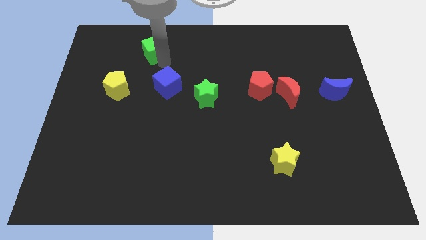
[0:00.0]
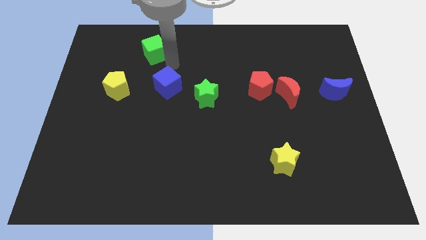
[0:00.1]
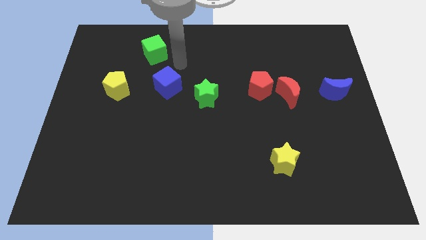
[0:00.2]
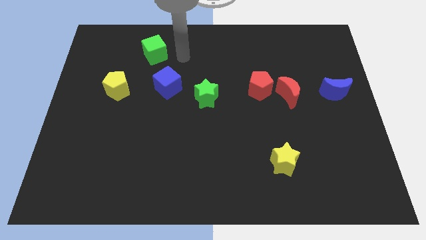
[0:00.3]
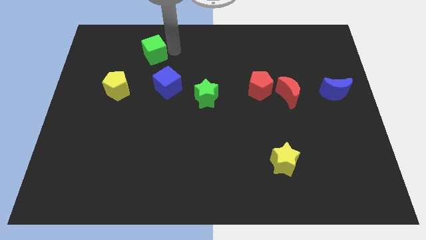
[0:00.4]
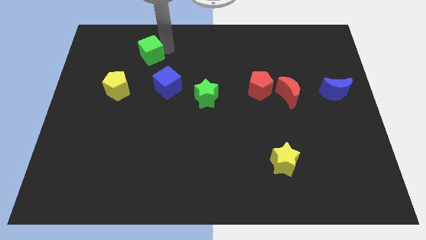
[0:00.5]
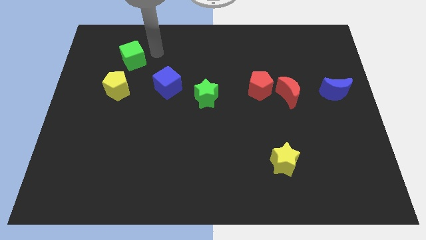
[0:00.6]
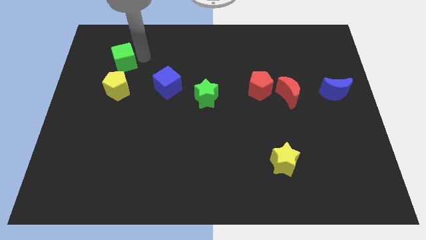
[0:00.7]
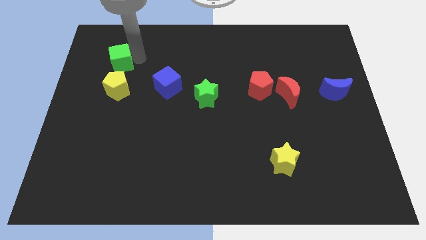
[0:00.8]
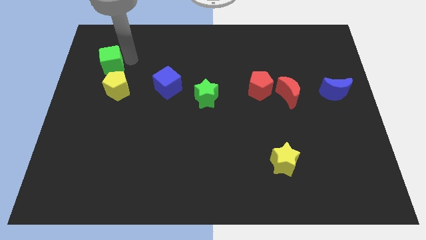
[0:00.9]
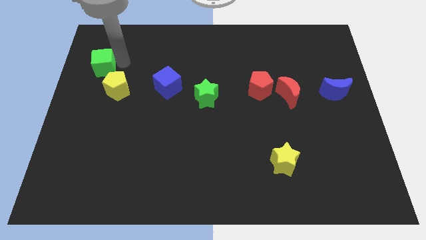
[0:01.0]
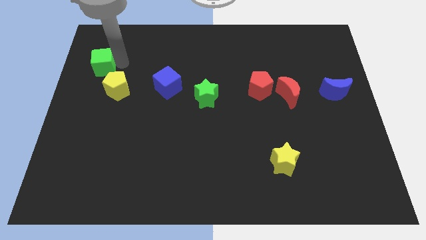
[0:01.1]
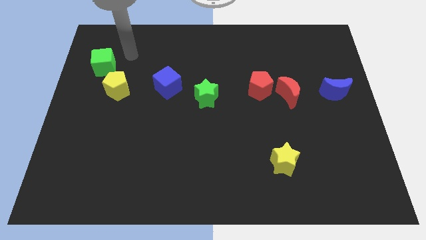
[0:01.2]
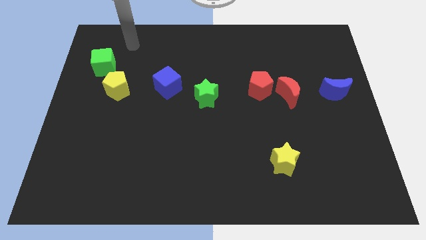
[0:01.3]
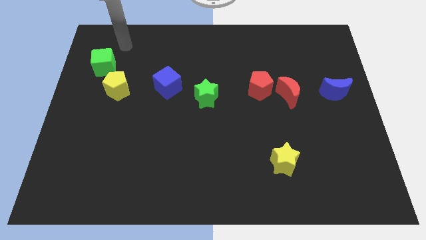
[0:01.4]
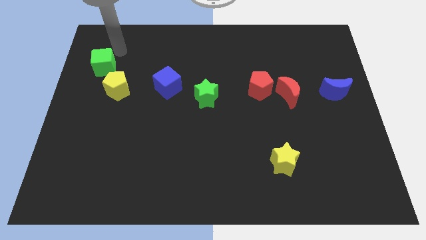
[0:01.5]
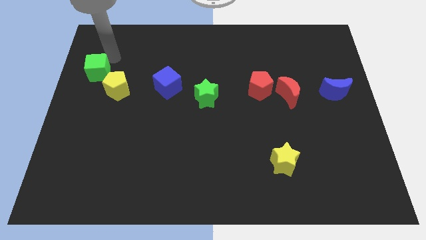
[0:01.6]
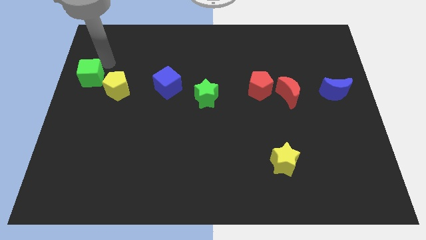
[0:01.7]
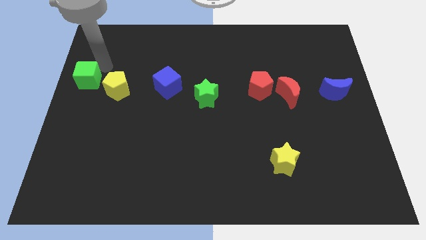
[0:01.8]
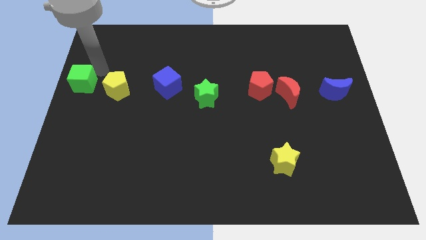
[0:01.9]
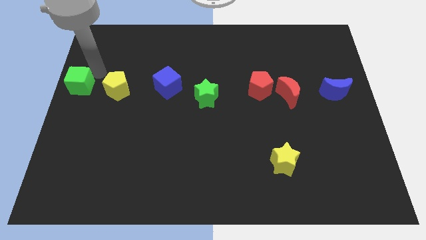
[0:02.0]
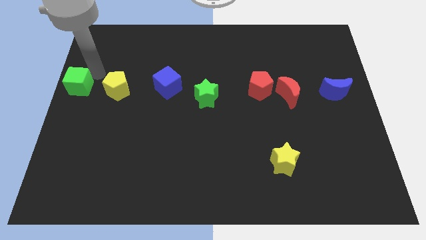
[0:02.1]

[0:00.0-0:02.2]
place the green cube to the left side of yellow pentagon

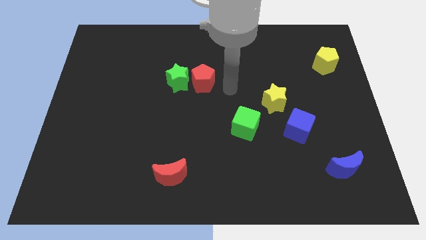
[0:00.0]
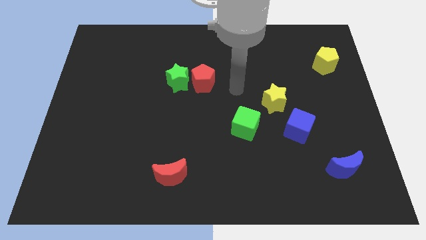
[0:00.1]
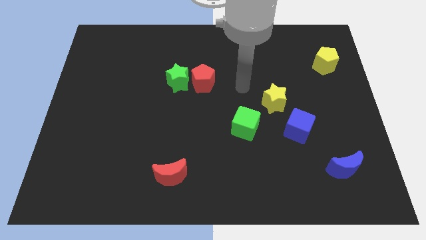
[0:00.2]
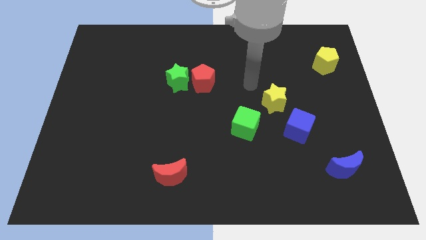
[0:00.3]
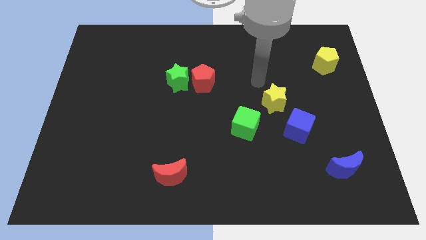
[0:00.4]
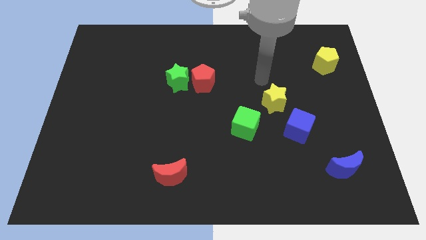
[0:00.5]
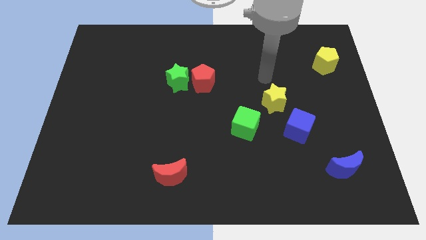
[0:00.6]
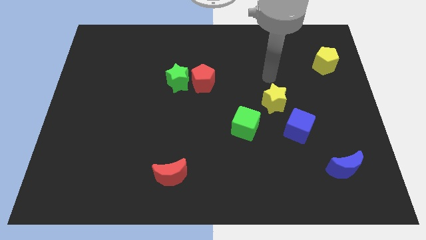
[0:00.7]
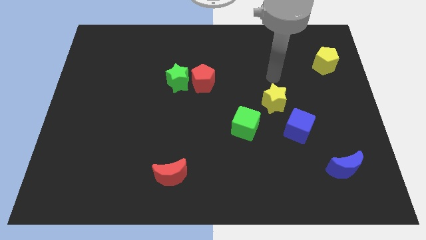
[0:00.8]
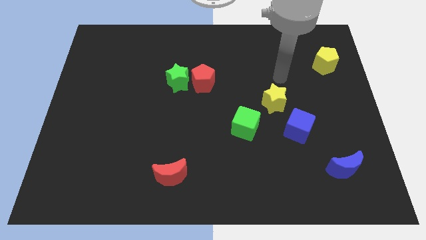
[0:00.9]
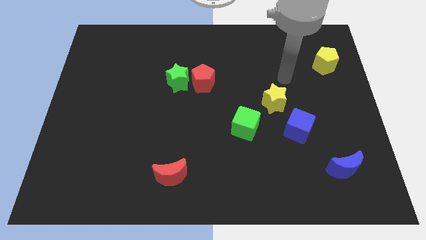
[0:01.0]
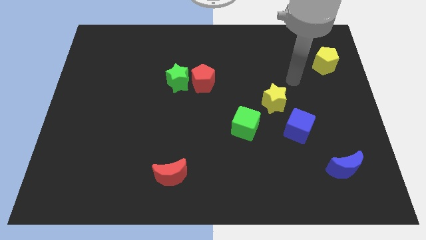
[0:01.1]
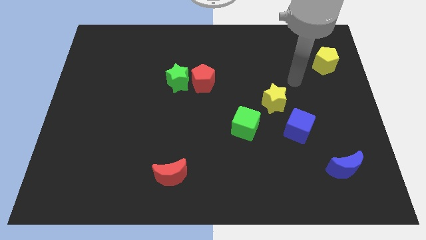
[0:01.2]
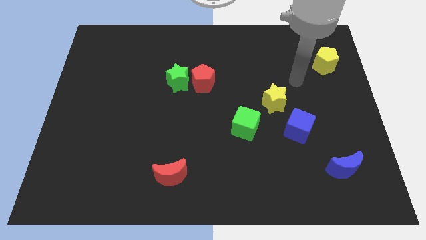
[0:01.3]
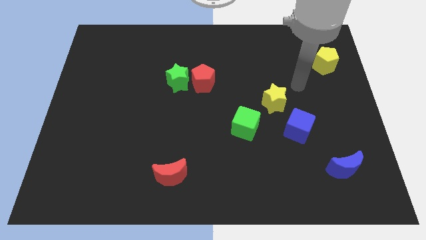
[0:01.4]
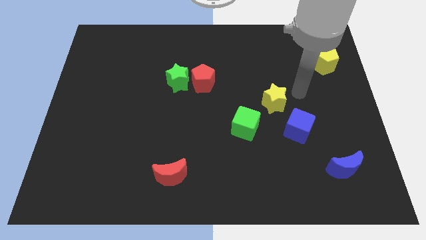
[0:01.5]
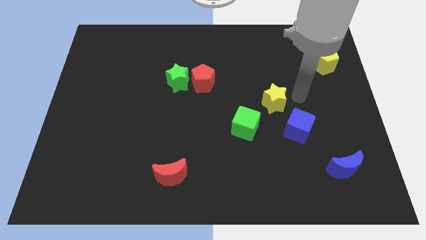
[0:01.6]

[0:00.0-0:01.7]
move your arm away from the red pentagon

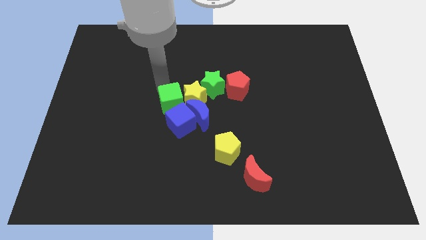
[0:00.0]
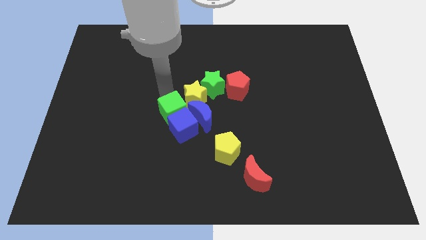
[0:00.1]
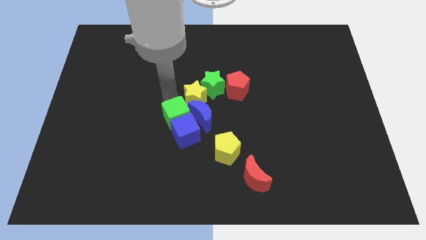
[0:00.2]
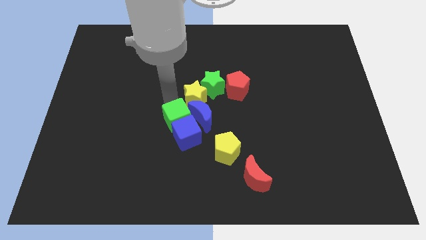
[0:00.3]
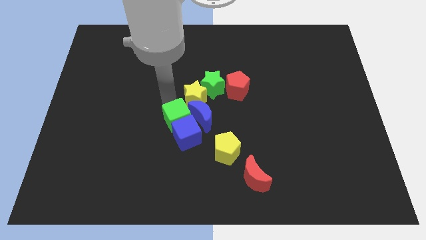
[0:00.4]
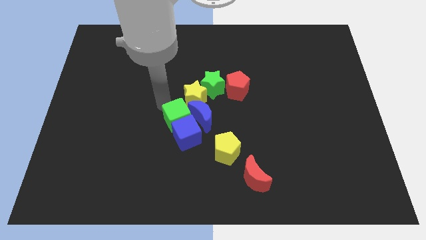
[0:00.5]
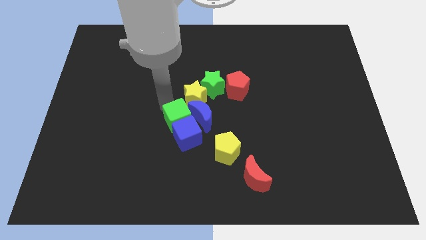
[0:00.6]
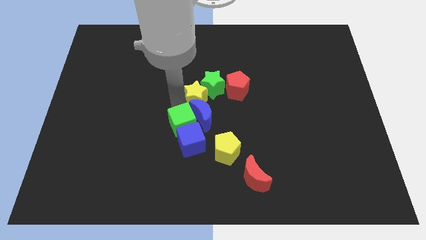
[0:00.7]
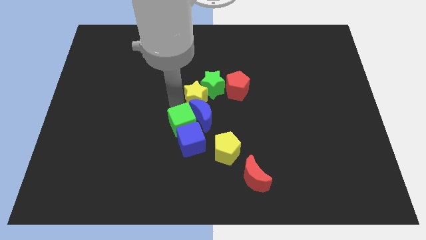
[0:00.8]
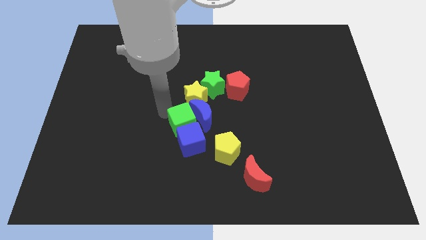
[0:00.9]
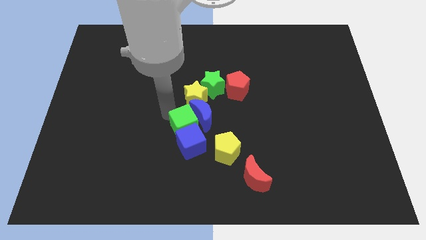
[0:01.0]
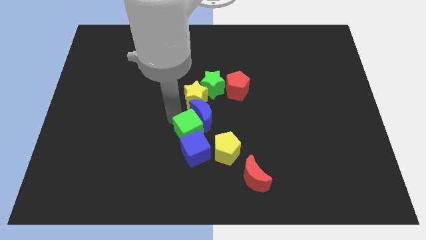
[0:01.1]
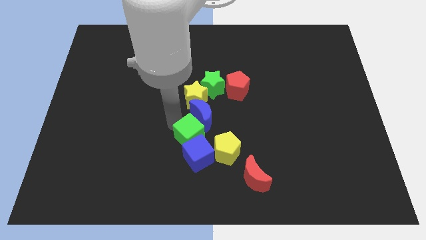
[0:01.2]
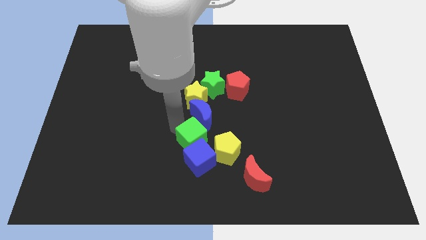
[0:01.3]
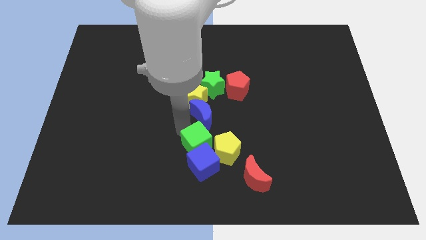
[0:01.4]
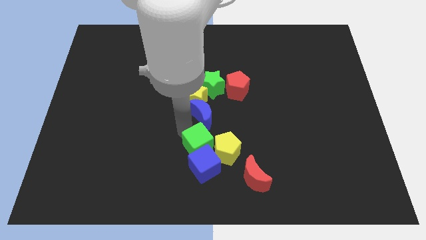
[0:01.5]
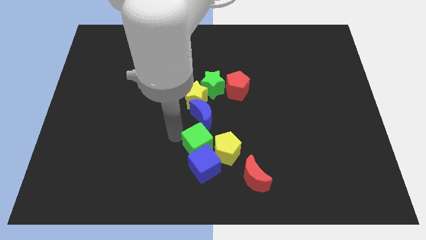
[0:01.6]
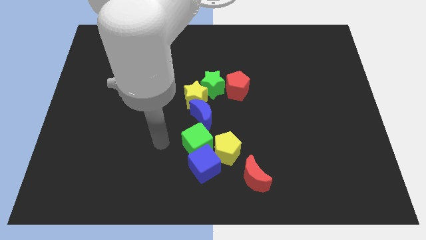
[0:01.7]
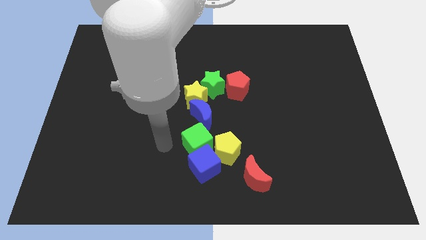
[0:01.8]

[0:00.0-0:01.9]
put the green cube on the left side of the yellow pentagon

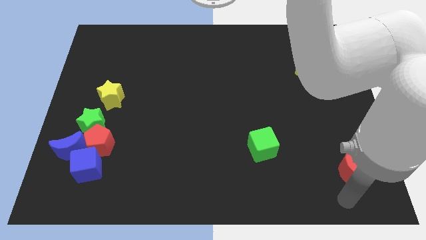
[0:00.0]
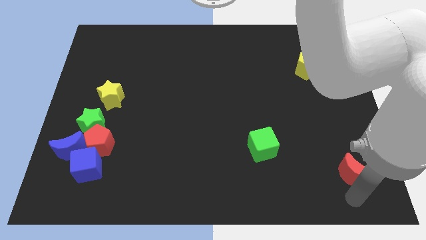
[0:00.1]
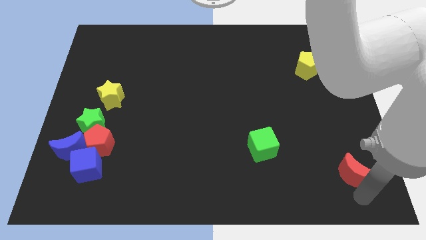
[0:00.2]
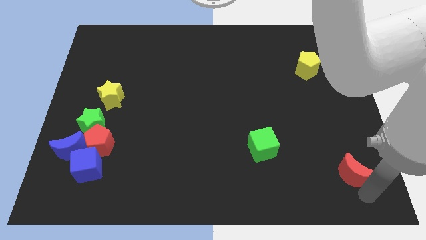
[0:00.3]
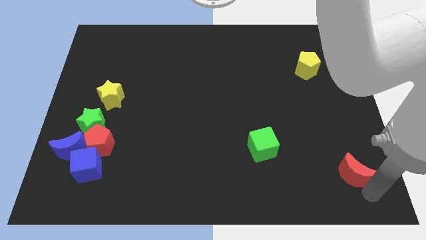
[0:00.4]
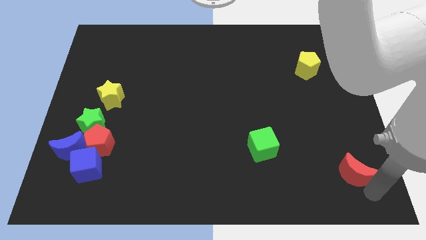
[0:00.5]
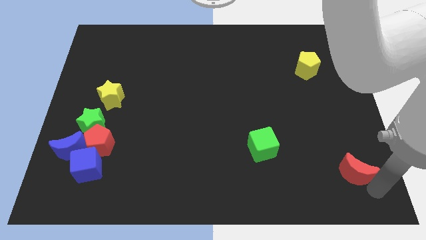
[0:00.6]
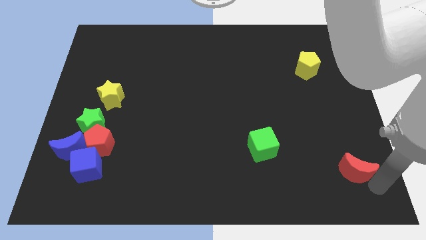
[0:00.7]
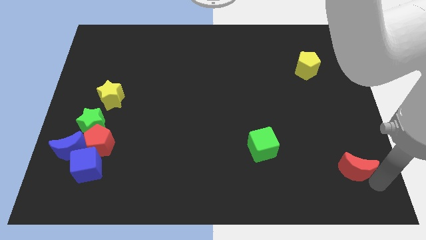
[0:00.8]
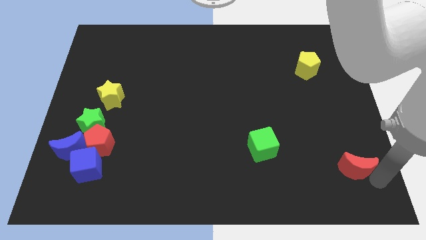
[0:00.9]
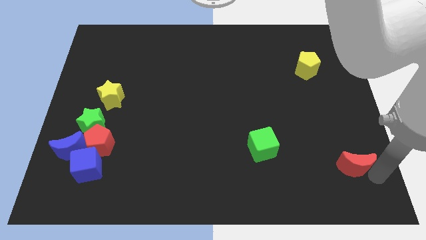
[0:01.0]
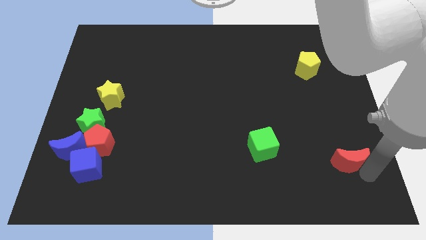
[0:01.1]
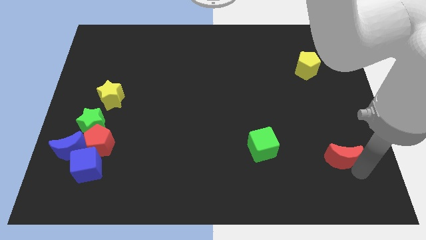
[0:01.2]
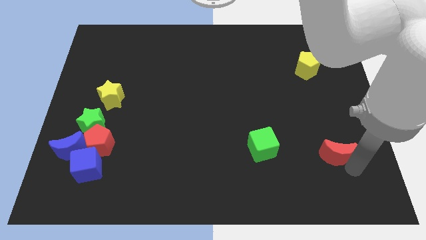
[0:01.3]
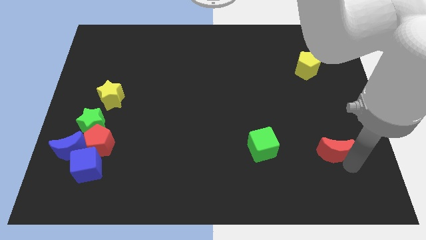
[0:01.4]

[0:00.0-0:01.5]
push the red crescent parallel to the green star

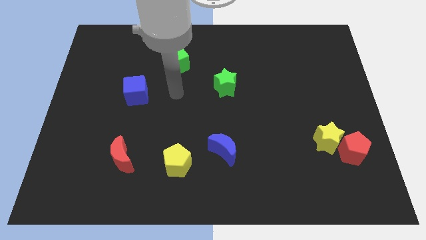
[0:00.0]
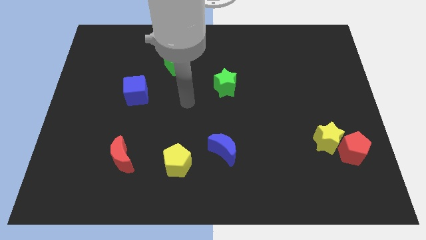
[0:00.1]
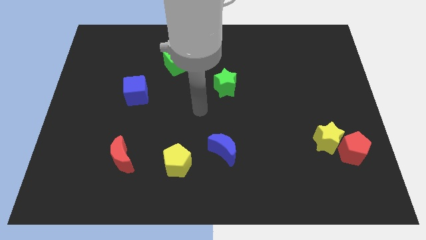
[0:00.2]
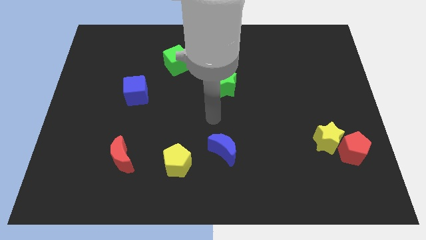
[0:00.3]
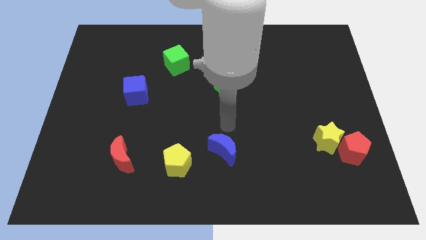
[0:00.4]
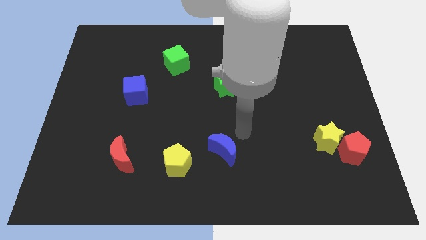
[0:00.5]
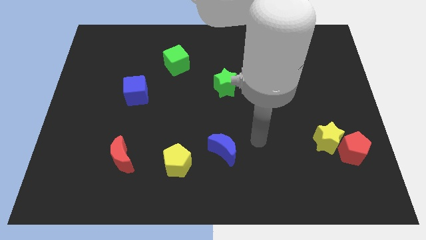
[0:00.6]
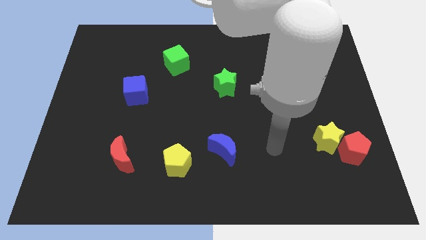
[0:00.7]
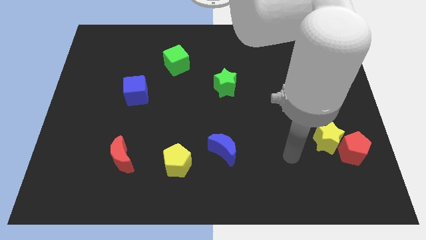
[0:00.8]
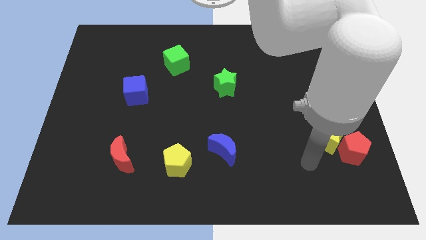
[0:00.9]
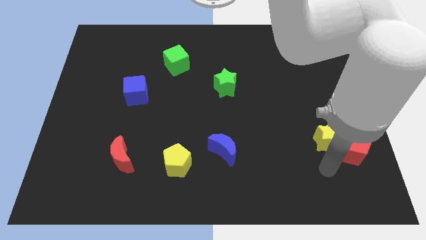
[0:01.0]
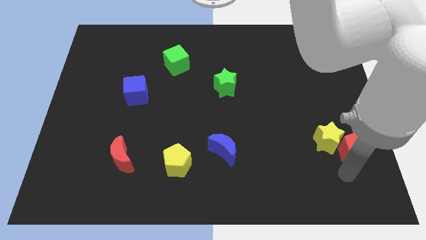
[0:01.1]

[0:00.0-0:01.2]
move the arm to the bottom of the yellow star

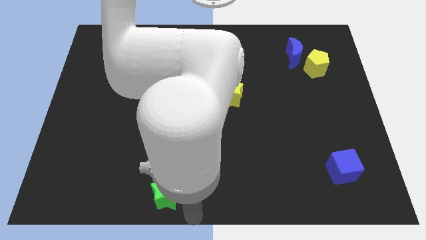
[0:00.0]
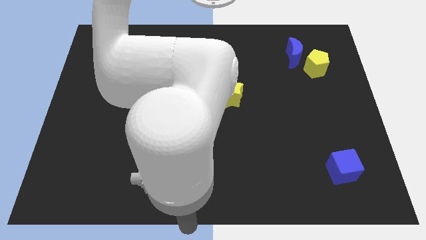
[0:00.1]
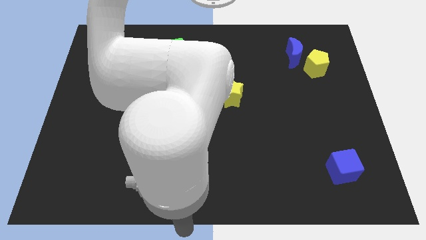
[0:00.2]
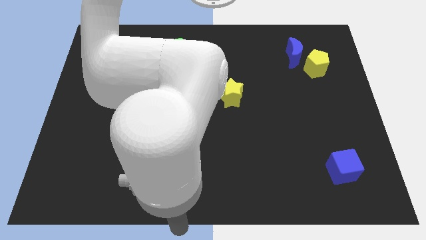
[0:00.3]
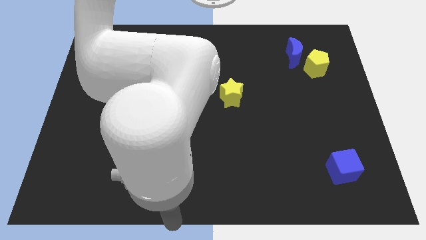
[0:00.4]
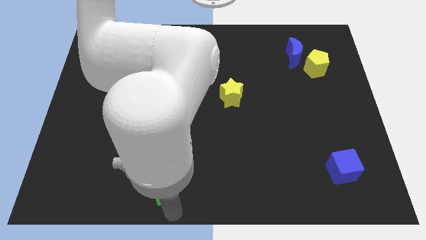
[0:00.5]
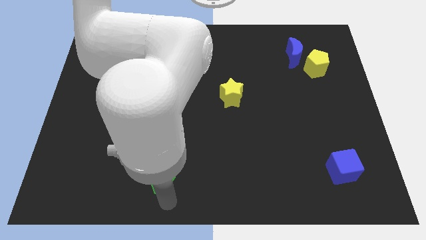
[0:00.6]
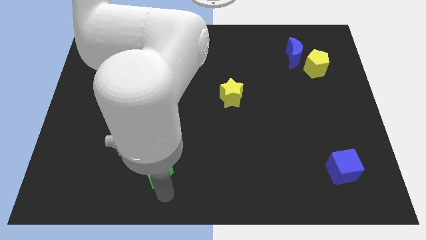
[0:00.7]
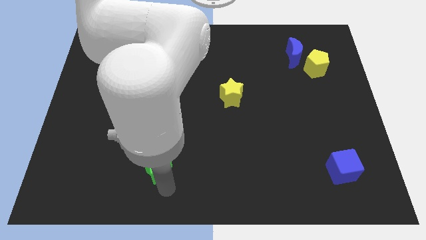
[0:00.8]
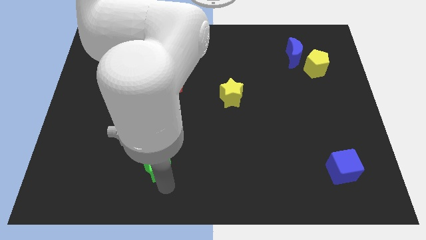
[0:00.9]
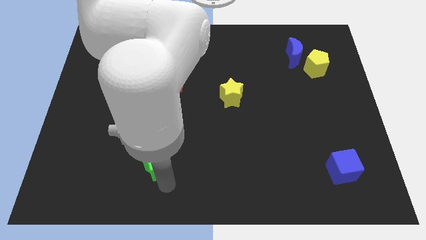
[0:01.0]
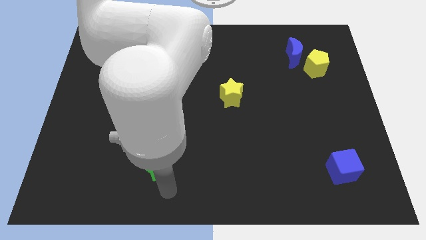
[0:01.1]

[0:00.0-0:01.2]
push the green star towards the top of the board
